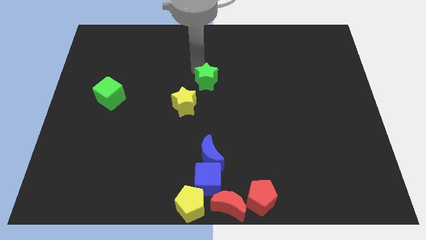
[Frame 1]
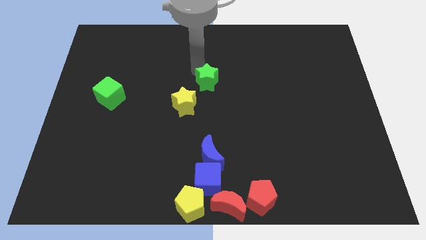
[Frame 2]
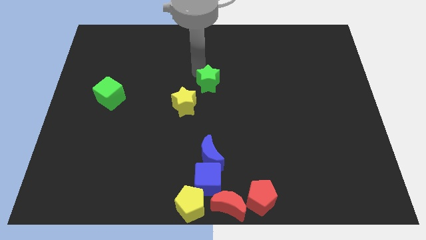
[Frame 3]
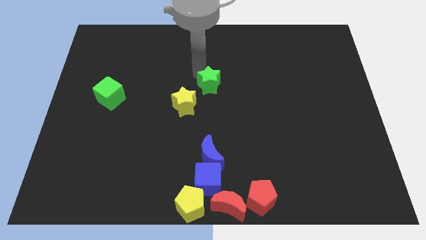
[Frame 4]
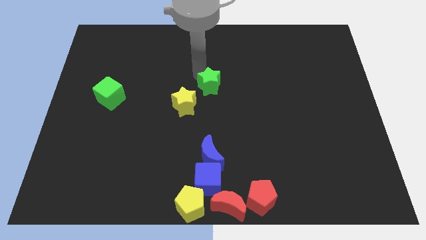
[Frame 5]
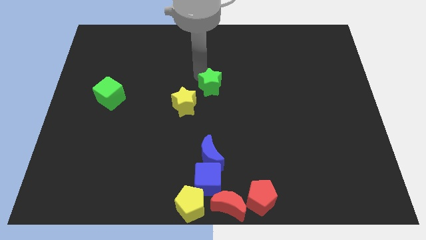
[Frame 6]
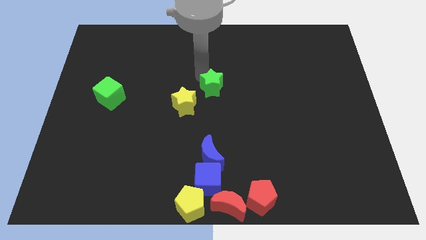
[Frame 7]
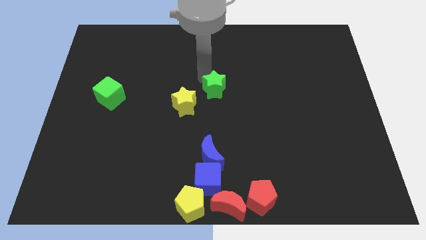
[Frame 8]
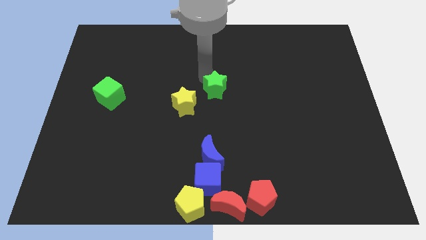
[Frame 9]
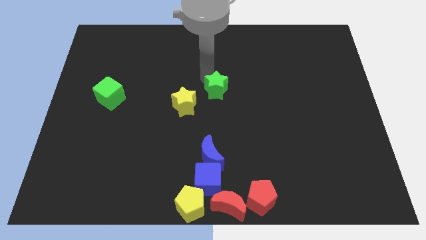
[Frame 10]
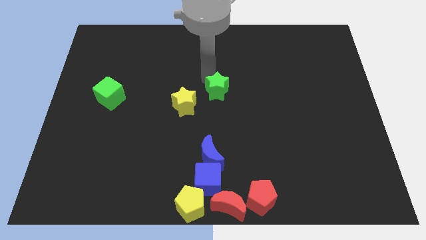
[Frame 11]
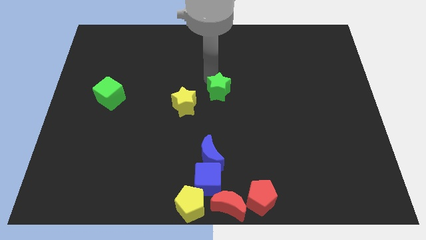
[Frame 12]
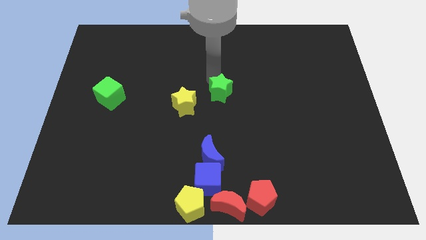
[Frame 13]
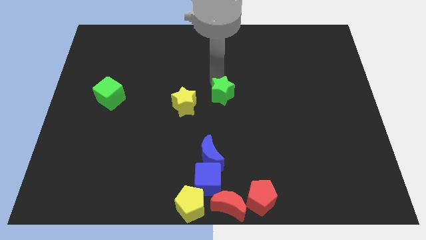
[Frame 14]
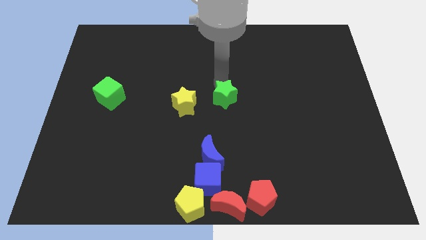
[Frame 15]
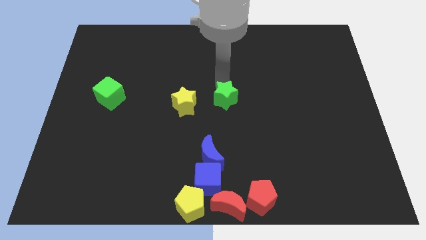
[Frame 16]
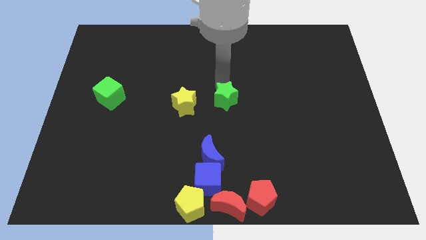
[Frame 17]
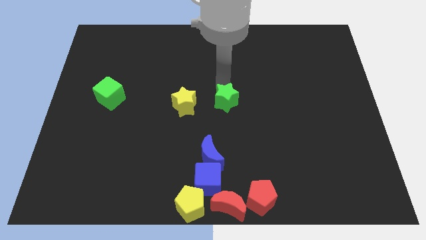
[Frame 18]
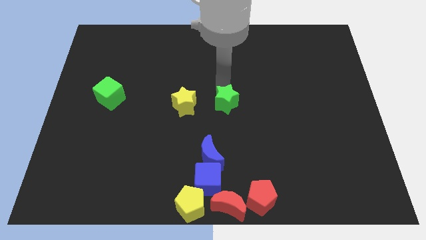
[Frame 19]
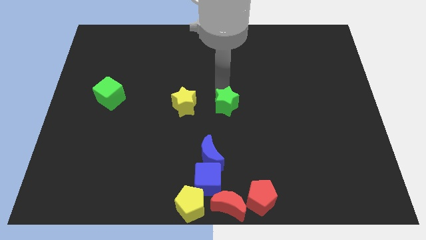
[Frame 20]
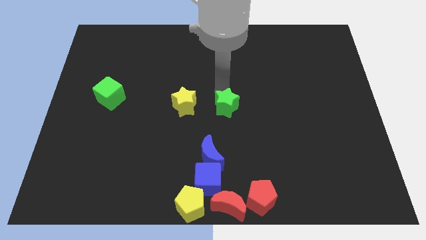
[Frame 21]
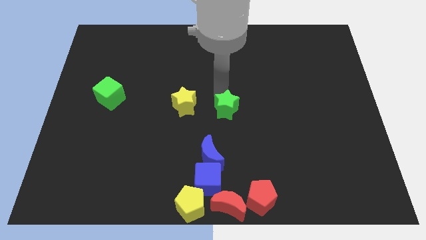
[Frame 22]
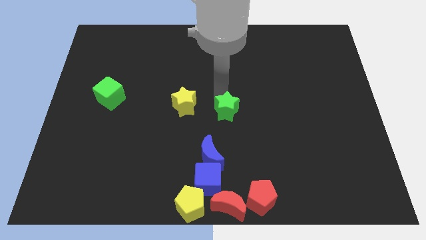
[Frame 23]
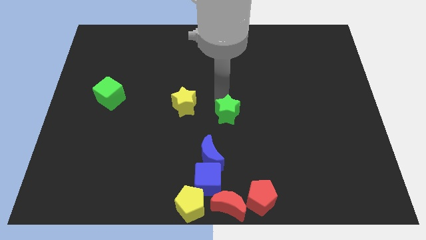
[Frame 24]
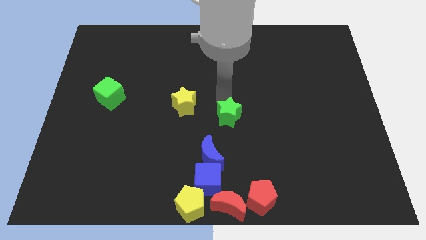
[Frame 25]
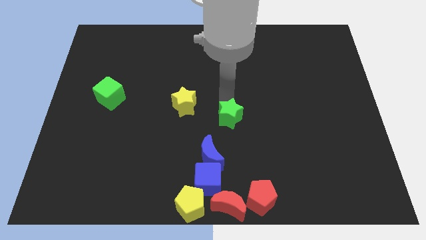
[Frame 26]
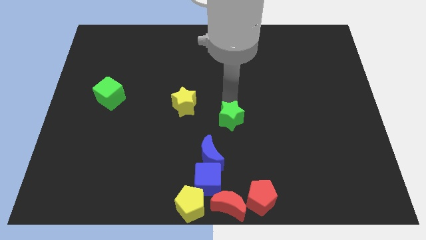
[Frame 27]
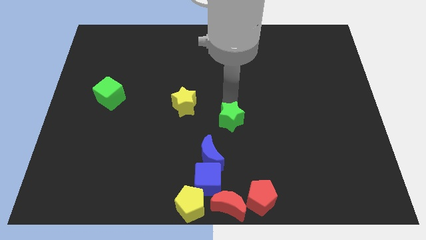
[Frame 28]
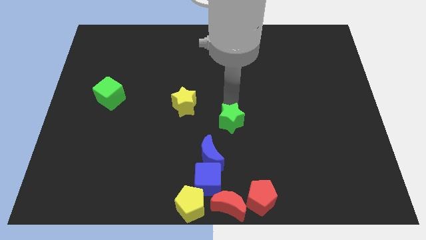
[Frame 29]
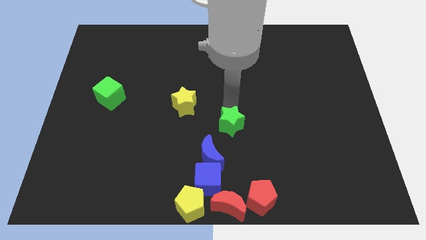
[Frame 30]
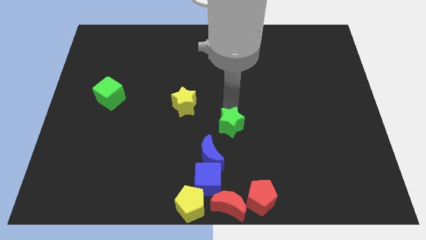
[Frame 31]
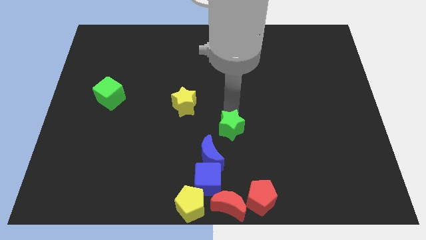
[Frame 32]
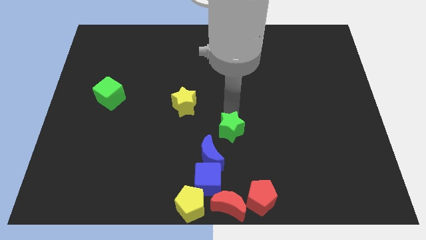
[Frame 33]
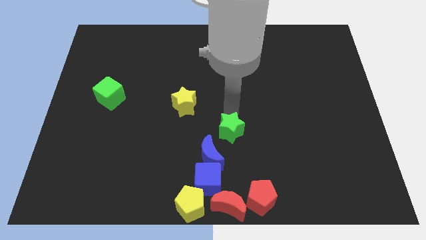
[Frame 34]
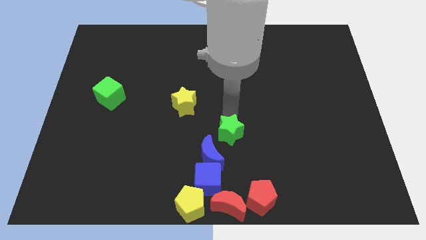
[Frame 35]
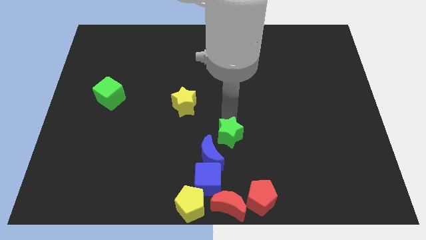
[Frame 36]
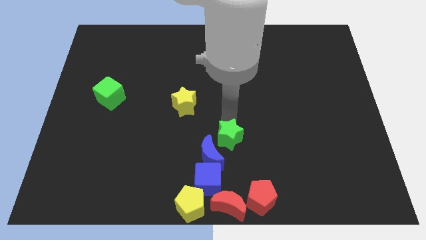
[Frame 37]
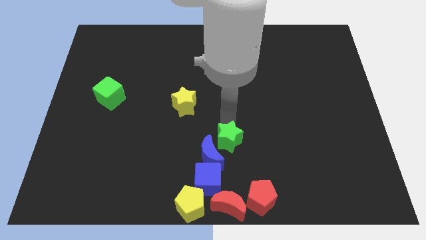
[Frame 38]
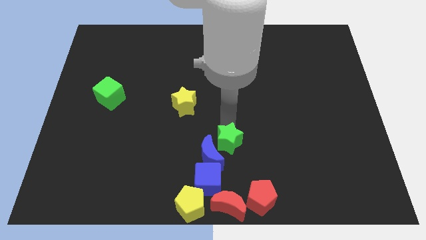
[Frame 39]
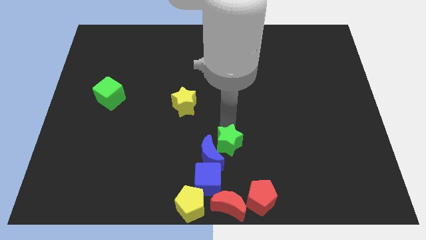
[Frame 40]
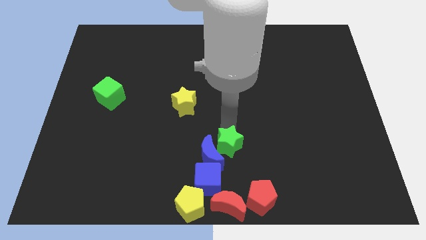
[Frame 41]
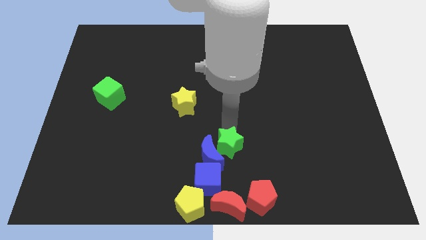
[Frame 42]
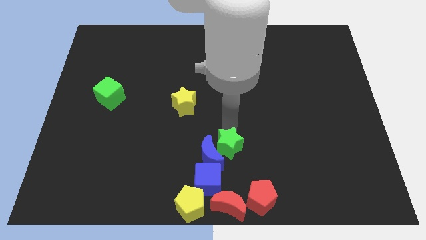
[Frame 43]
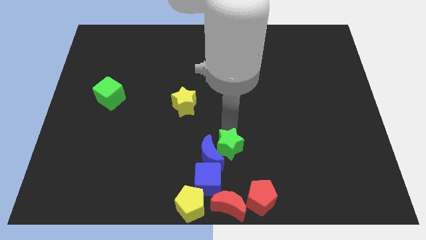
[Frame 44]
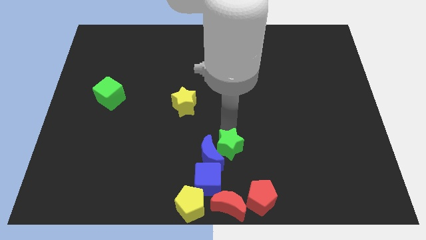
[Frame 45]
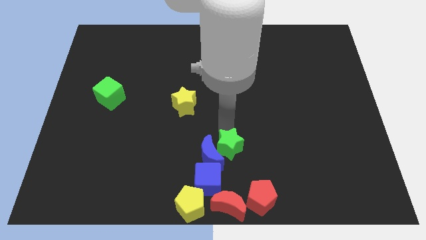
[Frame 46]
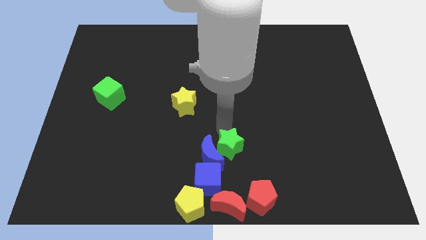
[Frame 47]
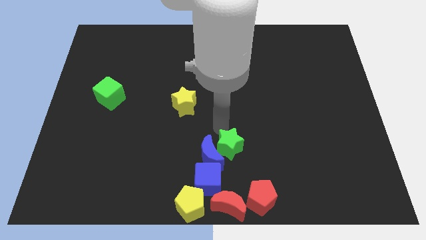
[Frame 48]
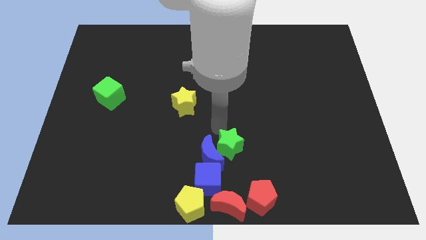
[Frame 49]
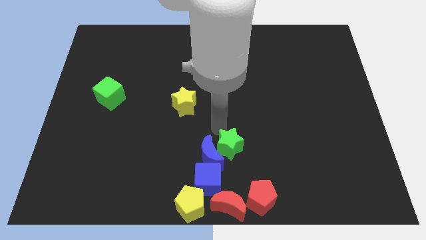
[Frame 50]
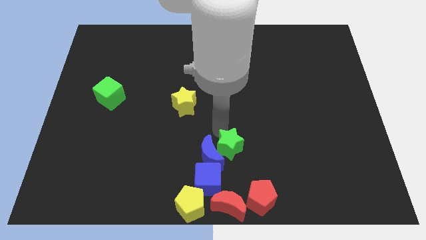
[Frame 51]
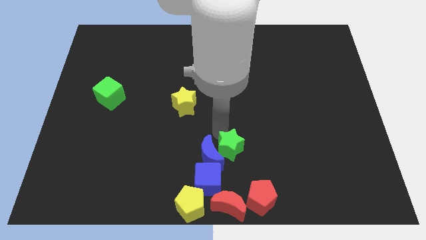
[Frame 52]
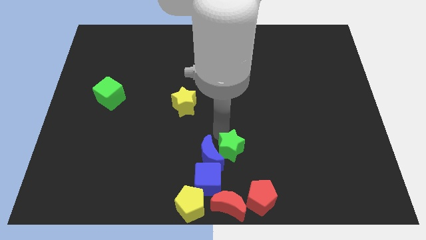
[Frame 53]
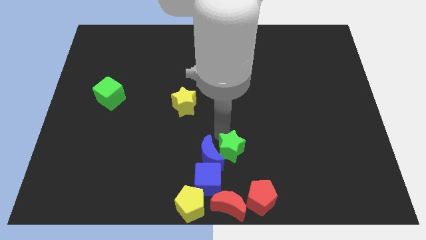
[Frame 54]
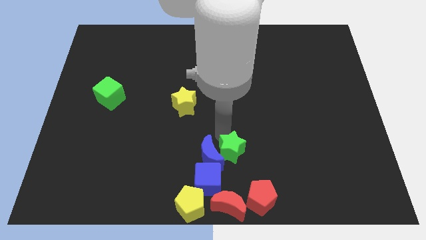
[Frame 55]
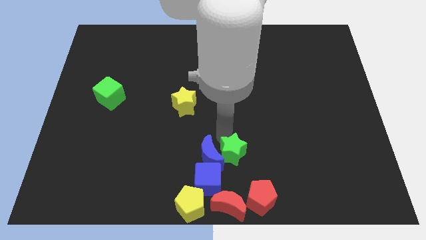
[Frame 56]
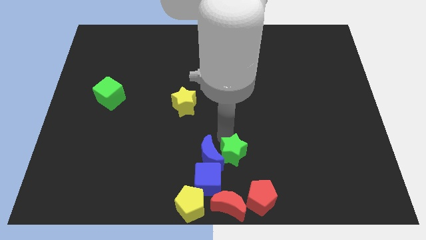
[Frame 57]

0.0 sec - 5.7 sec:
push the green star to the right of the blue crescent

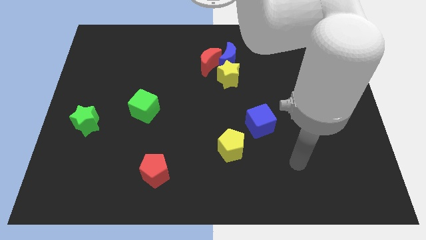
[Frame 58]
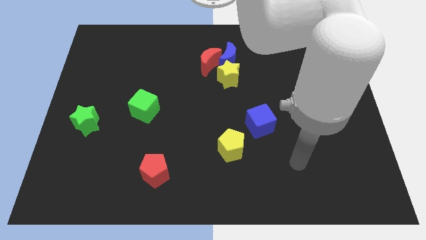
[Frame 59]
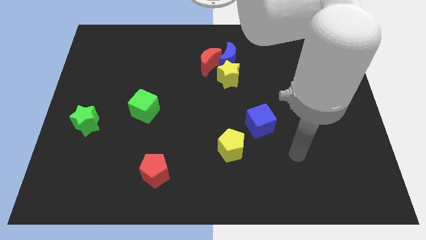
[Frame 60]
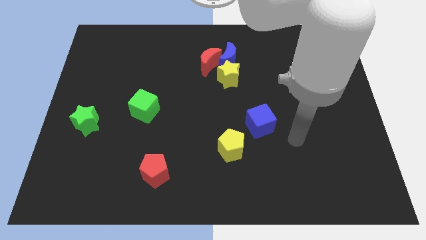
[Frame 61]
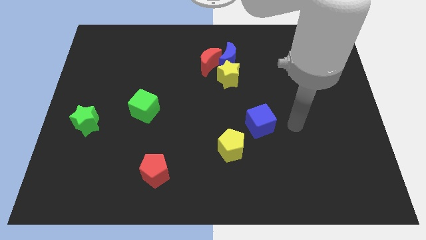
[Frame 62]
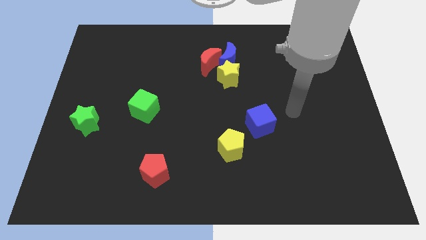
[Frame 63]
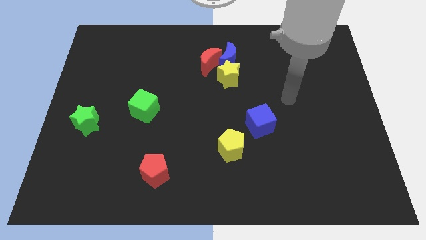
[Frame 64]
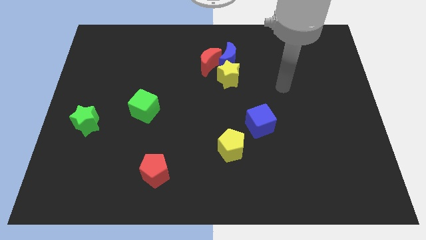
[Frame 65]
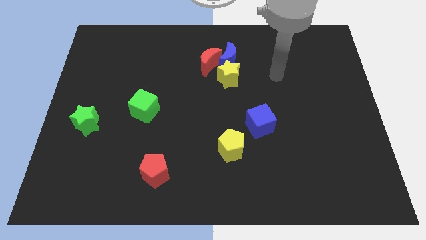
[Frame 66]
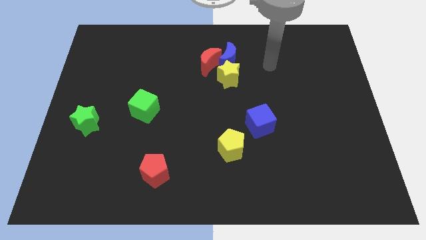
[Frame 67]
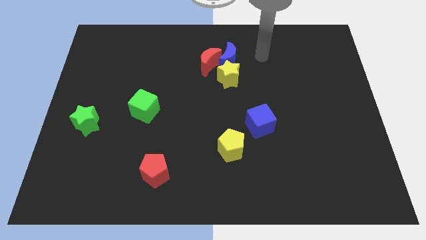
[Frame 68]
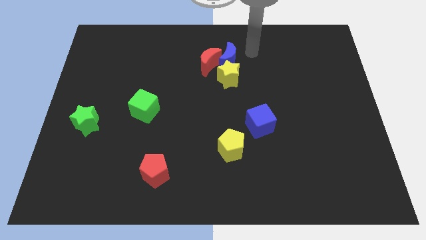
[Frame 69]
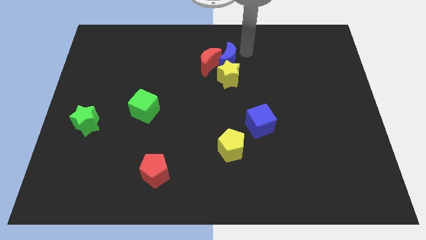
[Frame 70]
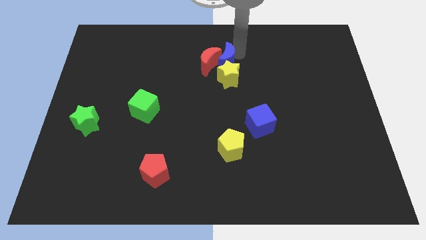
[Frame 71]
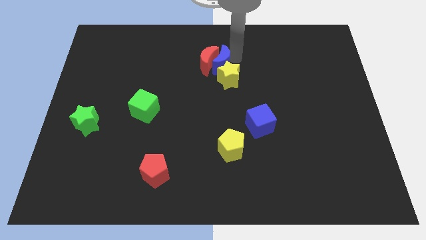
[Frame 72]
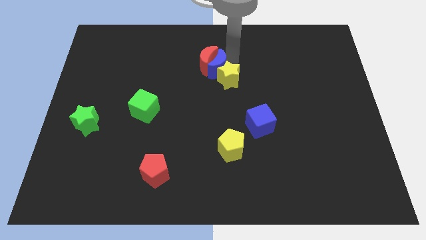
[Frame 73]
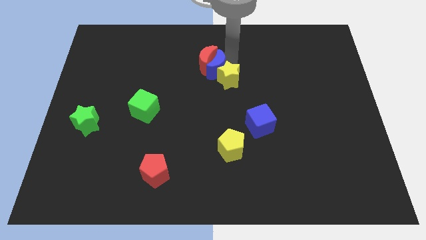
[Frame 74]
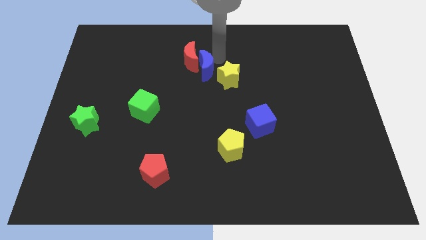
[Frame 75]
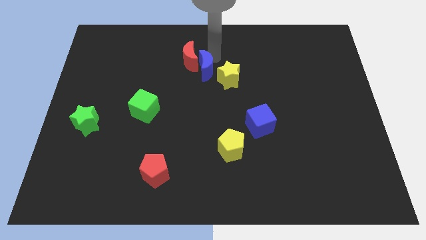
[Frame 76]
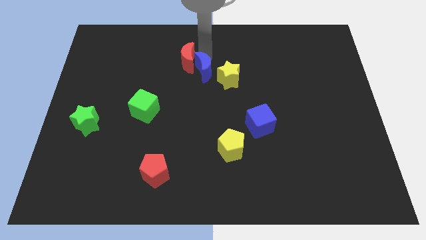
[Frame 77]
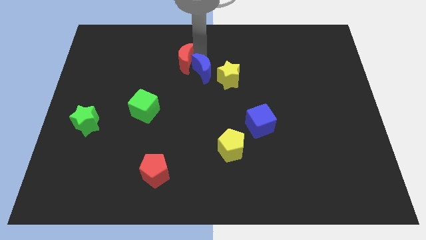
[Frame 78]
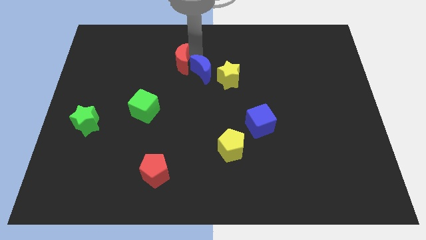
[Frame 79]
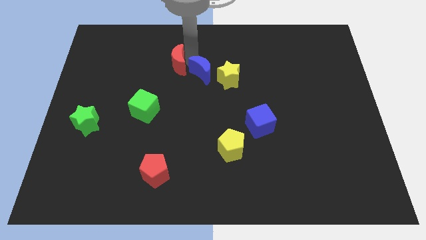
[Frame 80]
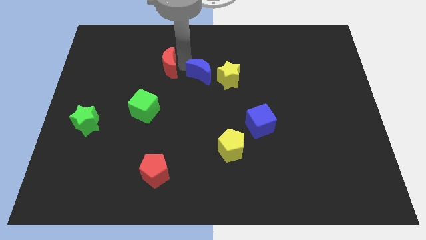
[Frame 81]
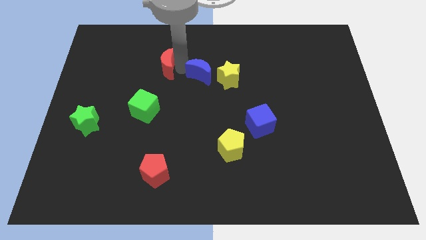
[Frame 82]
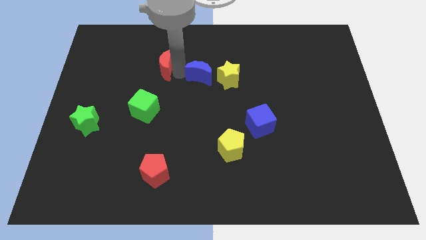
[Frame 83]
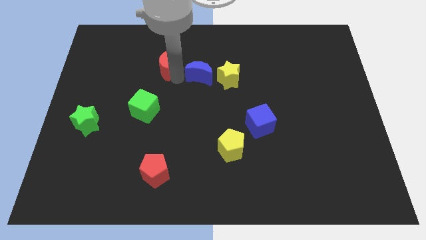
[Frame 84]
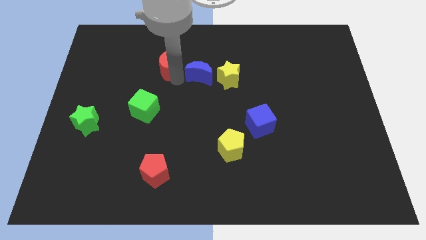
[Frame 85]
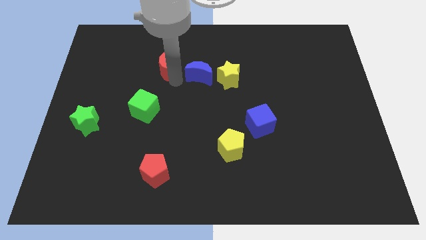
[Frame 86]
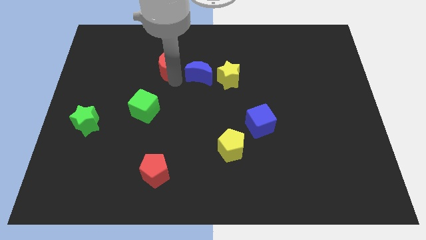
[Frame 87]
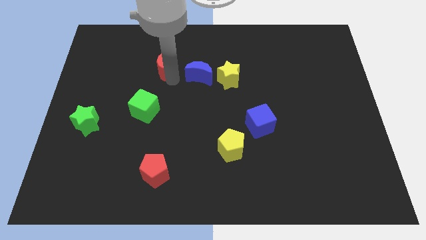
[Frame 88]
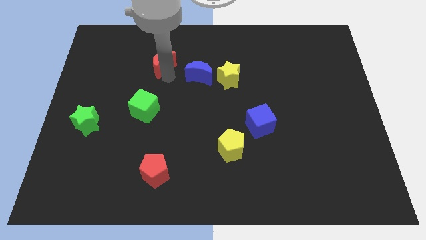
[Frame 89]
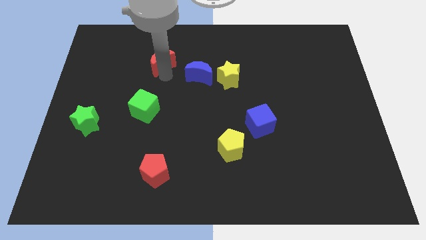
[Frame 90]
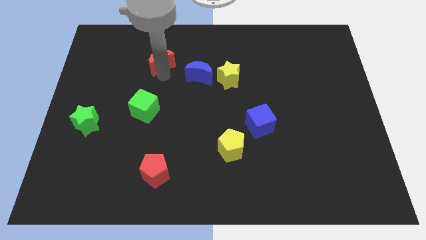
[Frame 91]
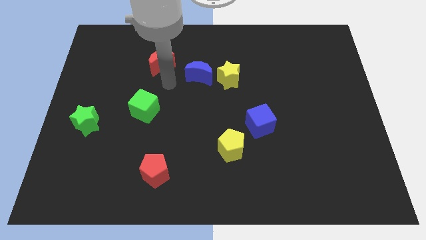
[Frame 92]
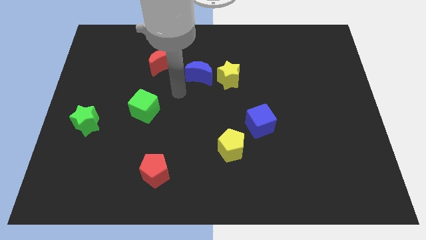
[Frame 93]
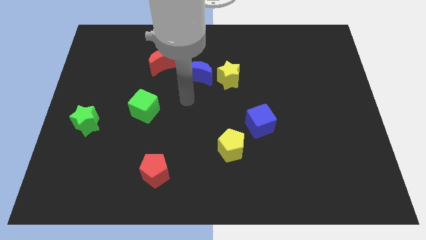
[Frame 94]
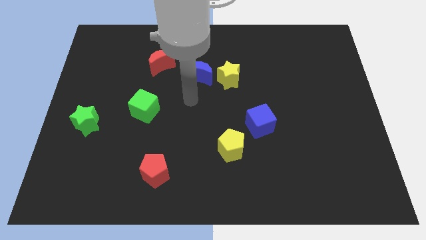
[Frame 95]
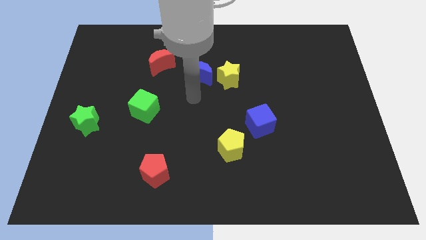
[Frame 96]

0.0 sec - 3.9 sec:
separate the red crescent from blue crescent towards left
